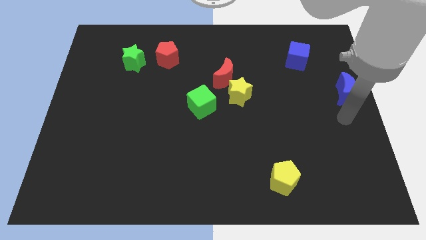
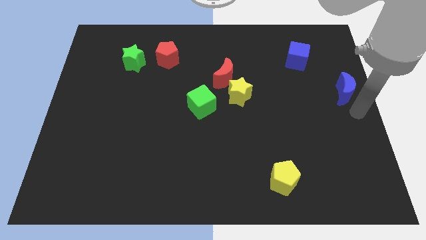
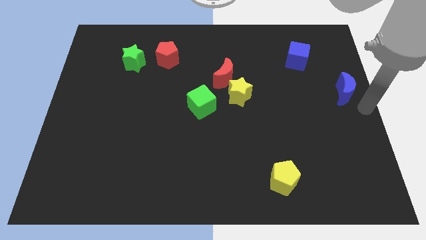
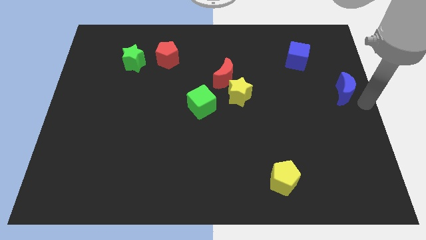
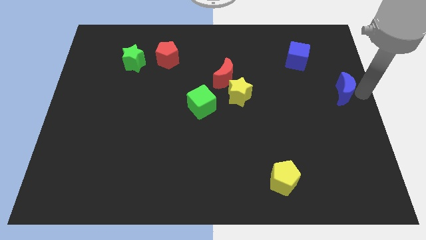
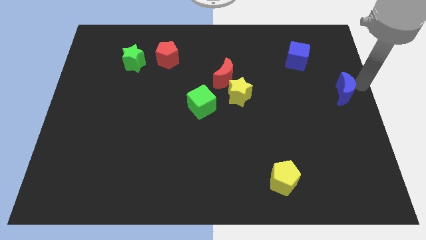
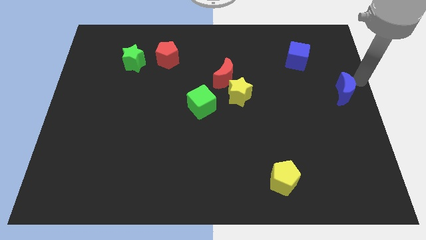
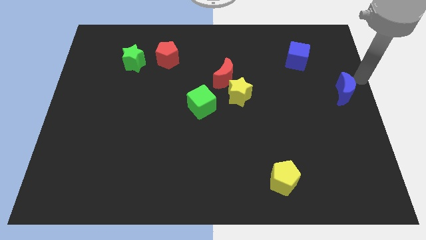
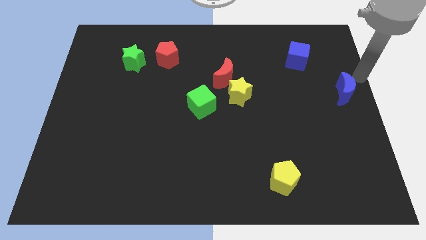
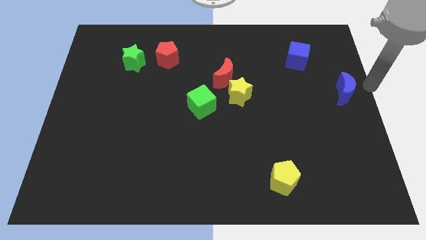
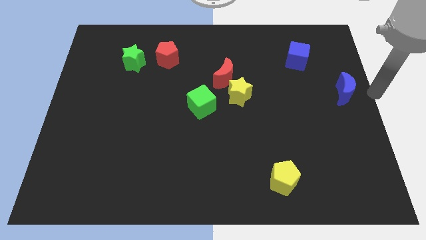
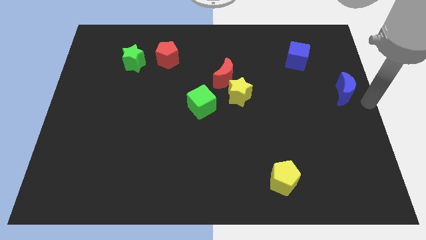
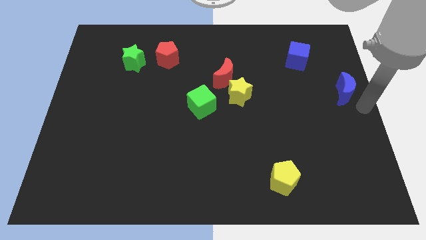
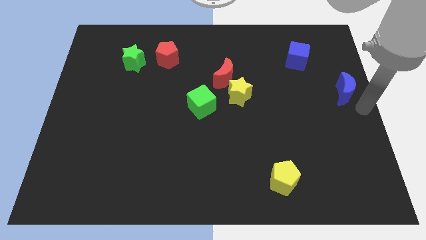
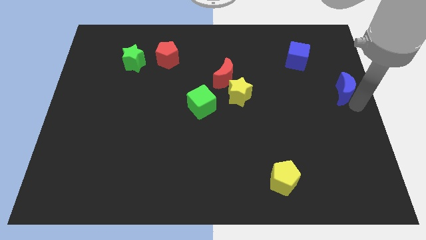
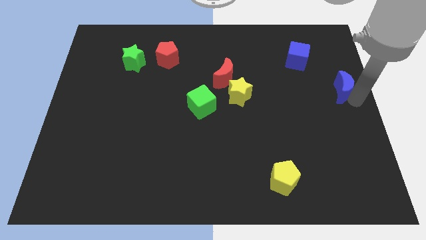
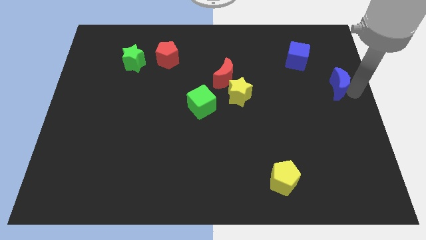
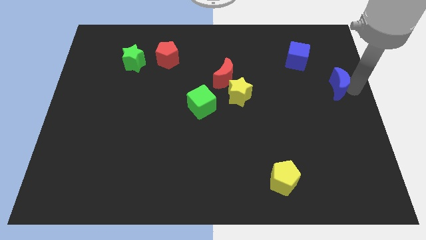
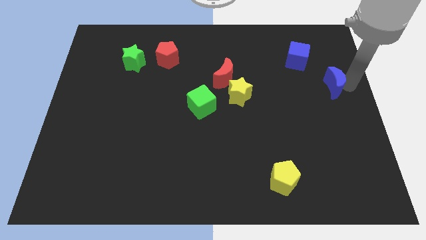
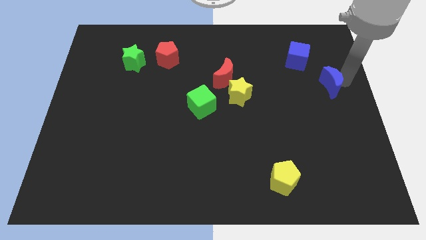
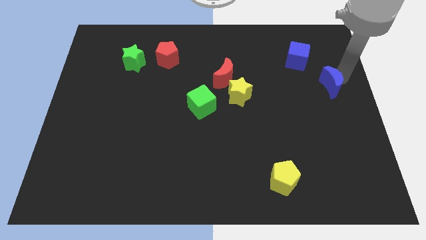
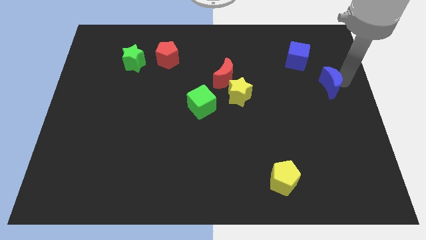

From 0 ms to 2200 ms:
move the blue moon towards the right side of the blue cube

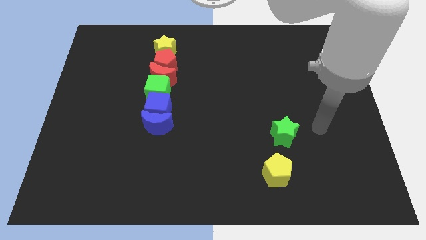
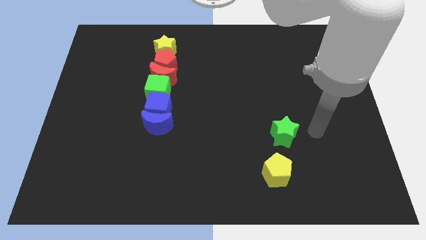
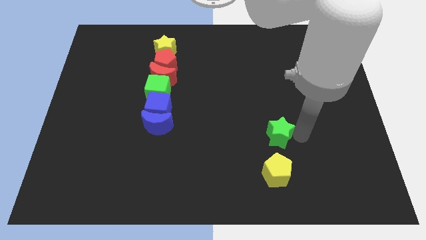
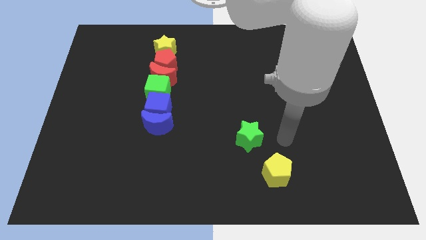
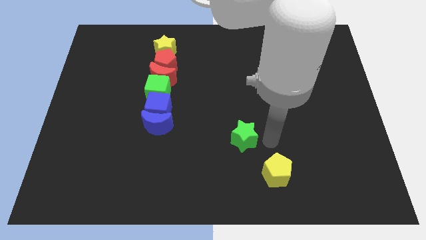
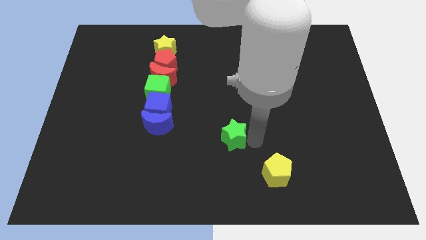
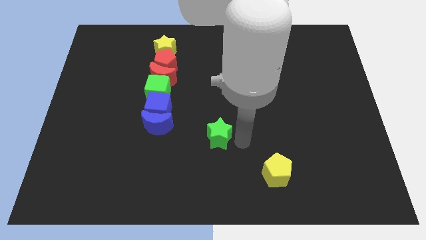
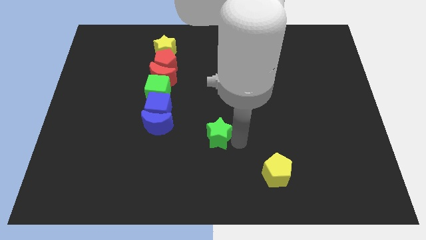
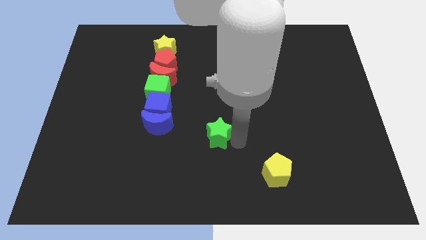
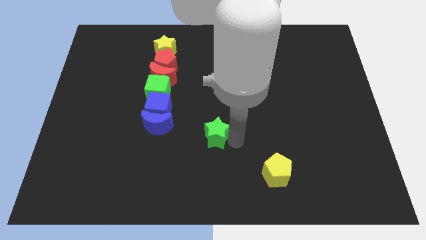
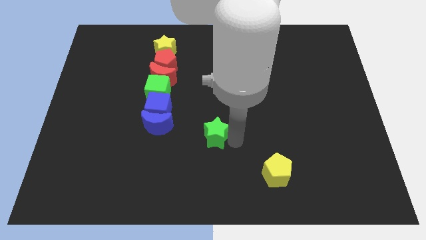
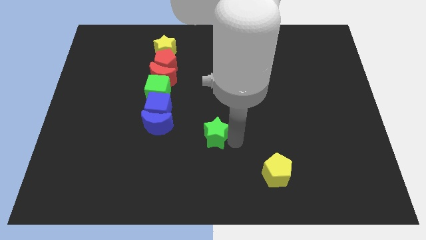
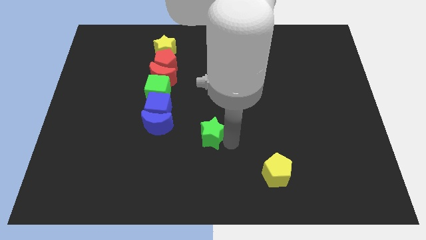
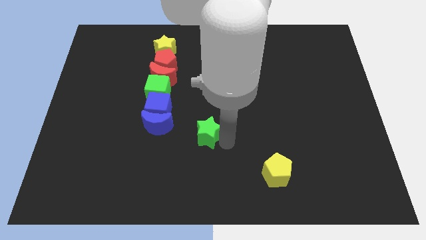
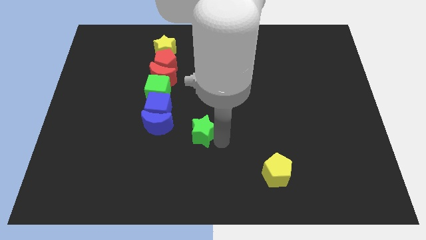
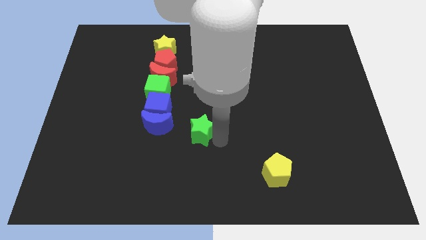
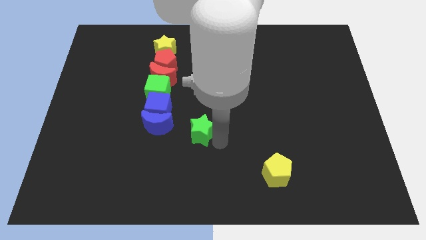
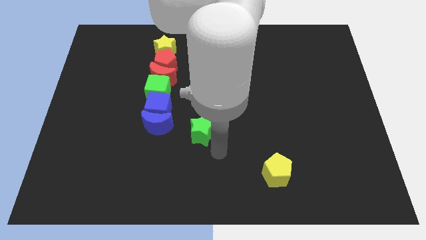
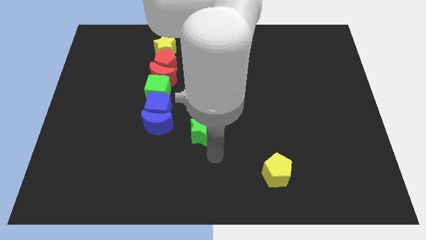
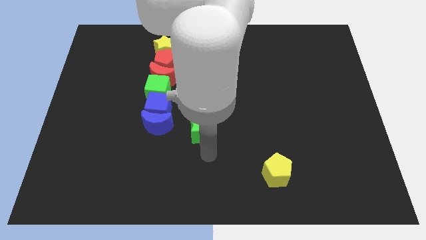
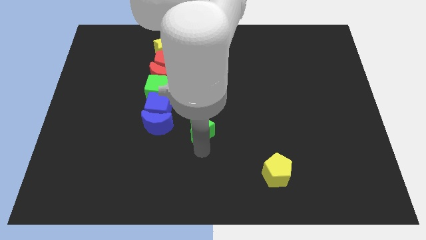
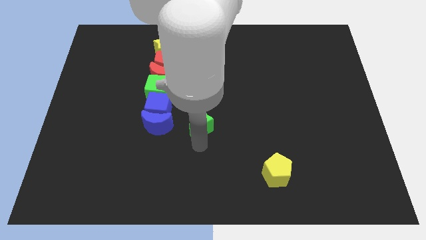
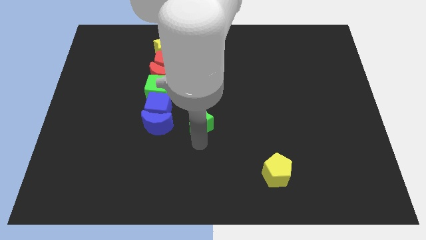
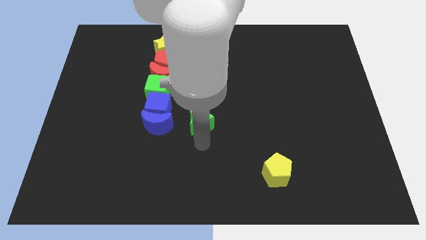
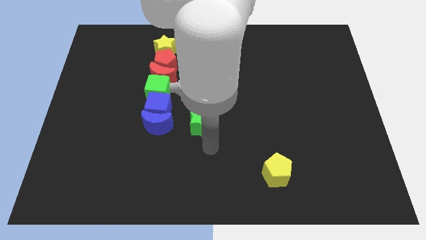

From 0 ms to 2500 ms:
move the green star to the right side of the blue moon

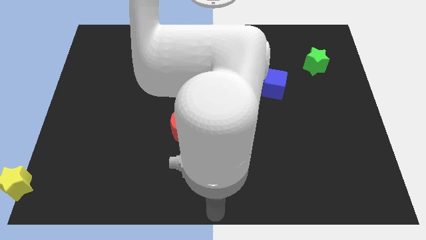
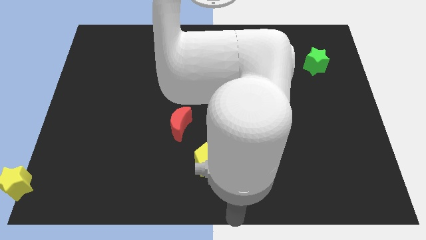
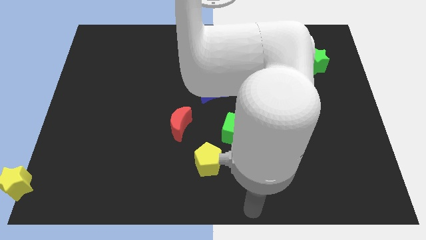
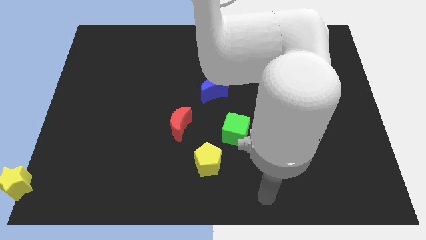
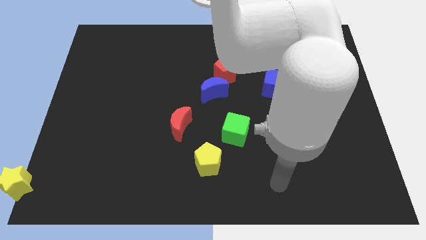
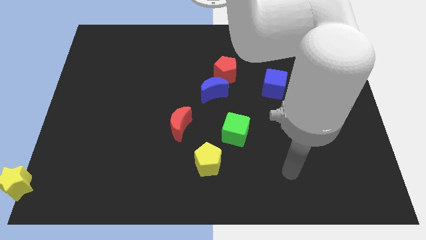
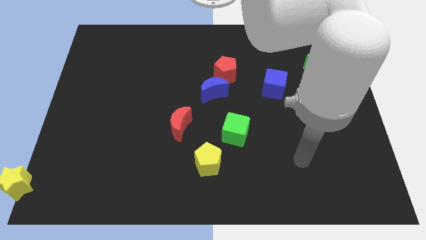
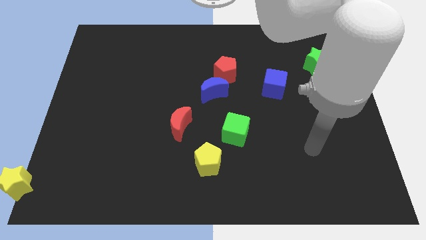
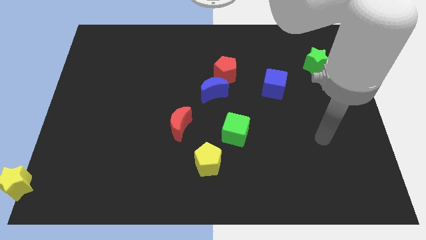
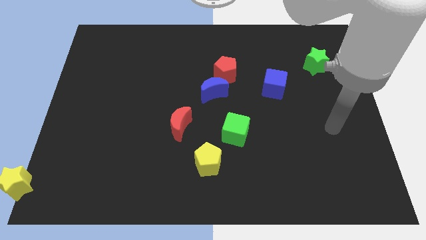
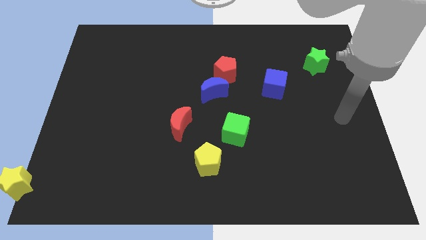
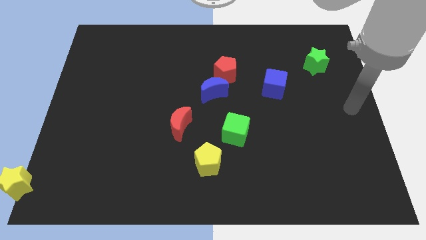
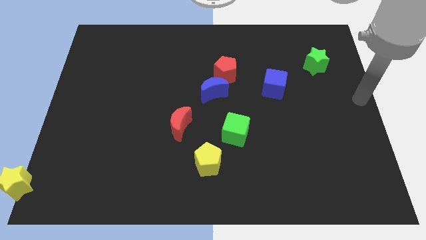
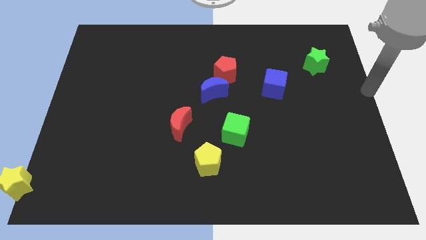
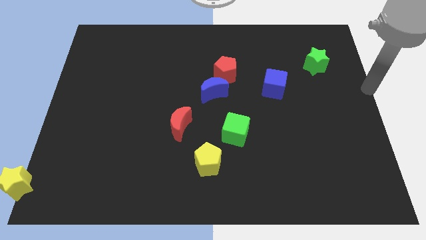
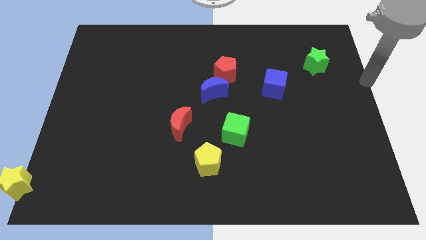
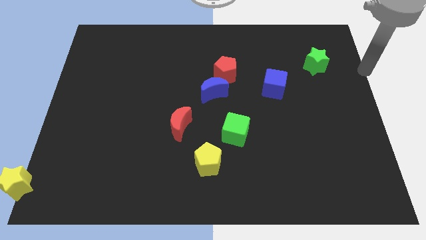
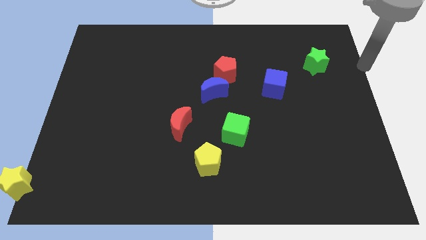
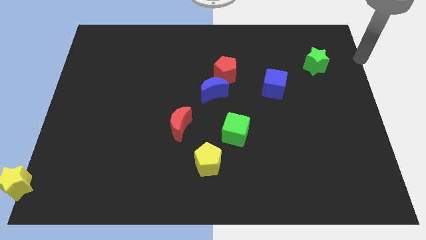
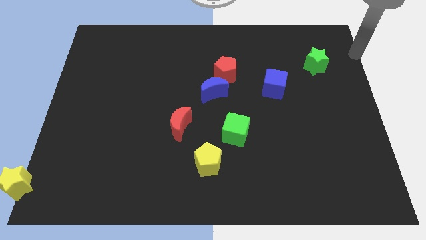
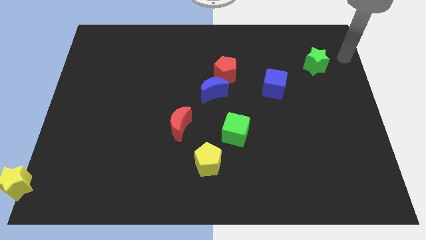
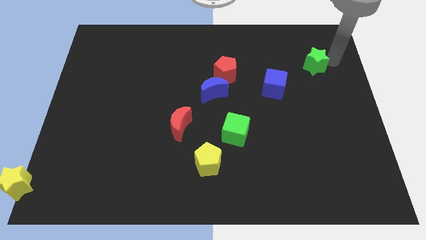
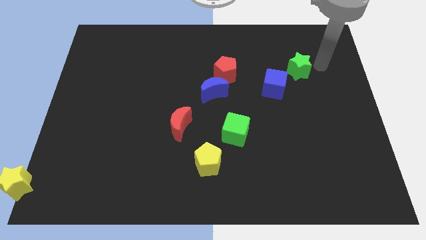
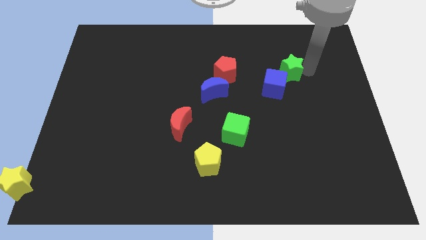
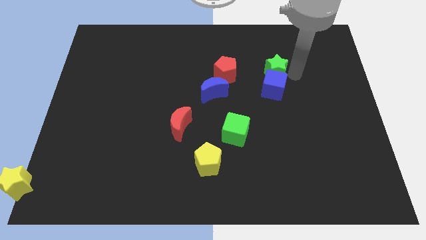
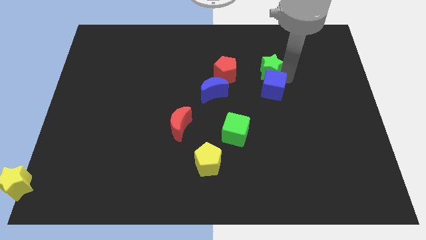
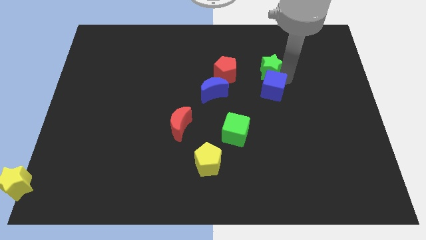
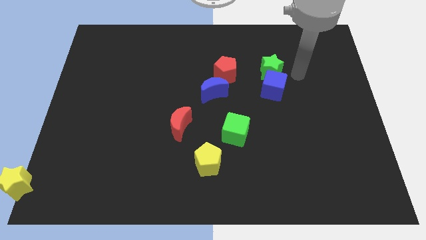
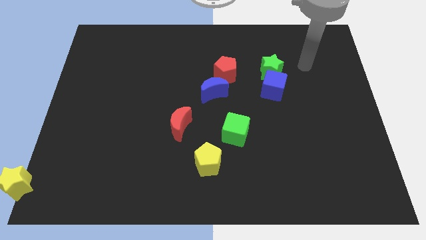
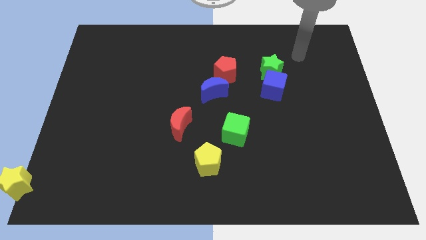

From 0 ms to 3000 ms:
put the green star at the top of the blue cube

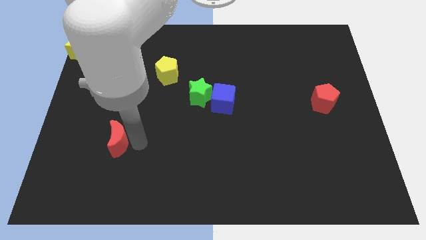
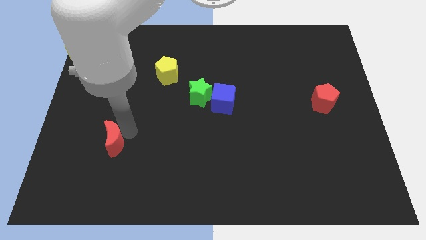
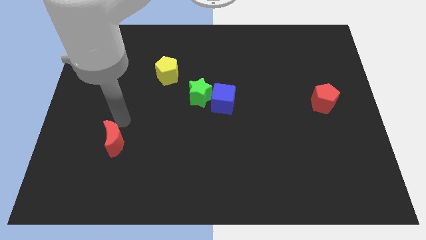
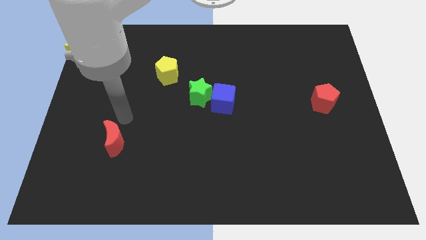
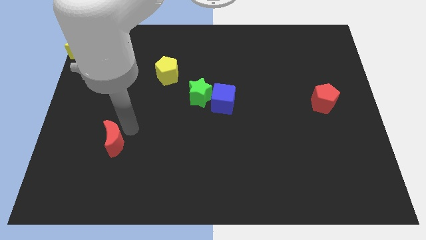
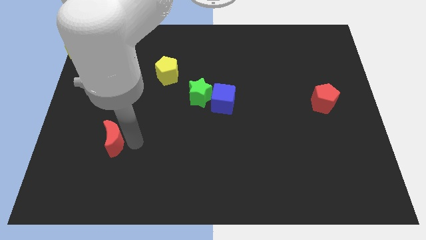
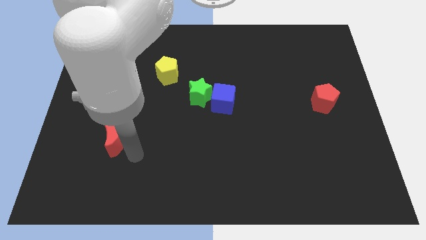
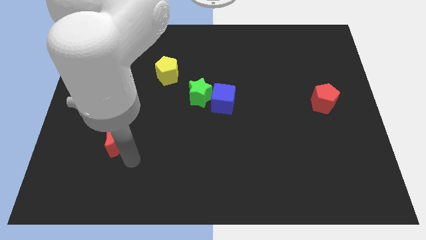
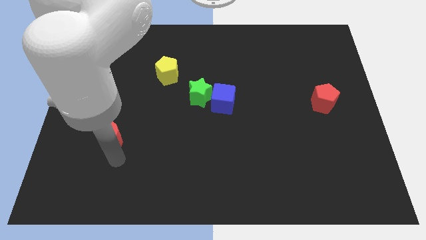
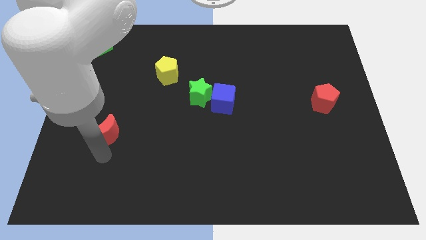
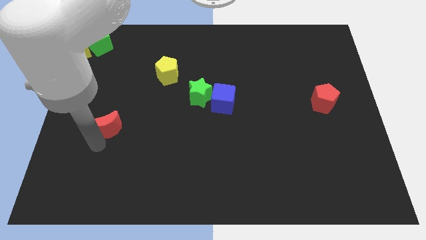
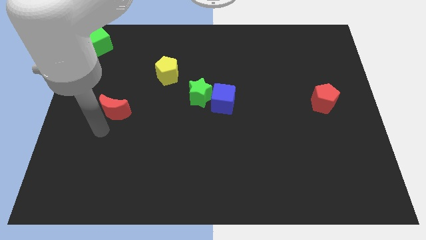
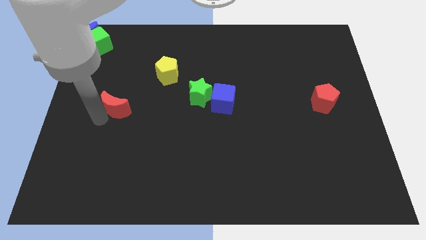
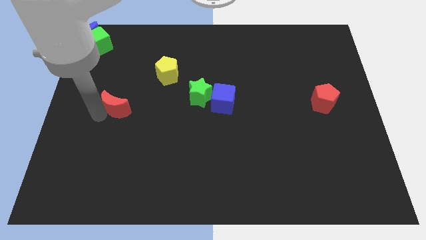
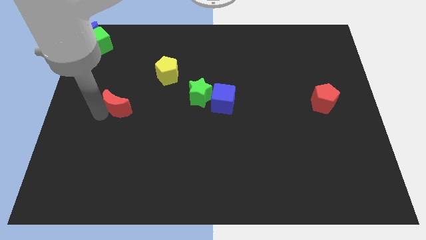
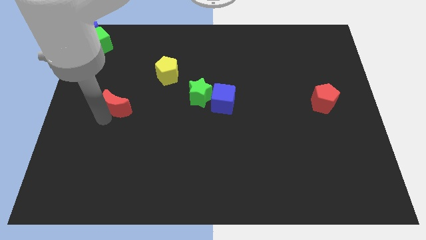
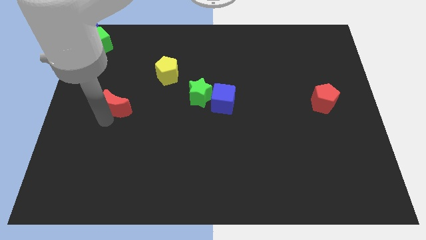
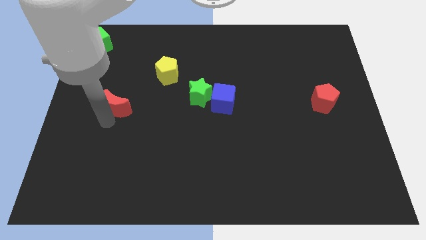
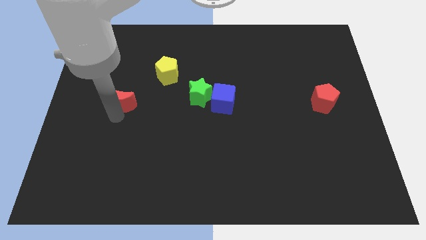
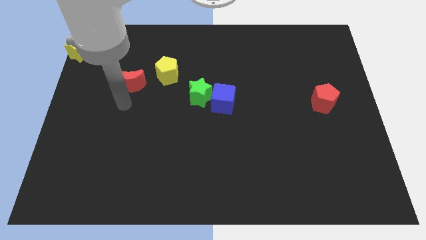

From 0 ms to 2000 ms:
move the red moon parallel to green star
